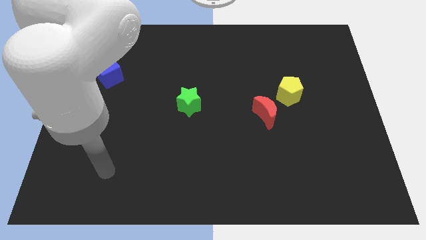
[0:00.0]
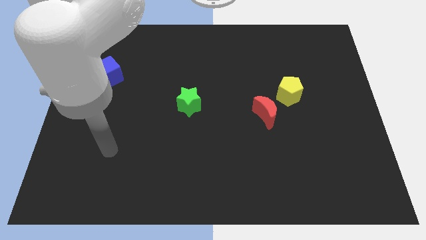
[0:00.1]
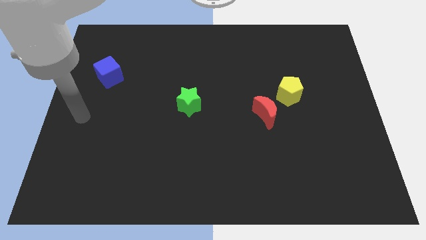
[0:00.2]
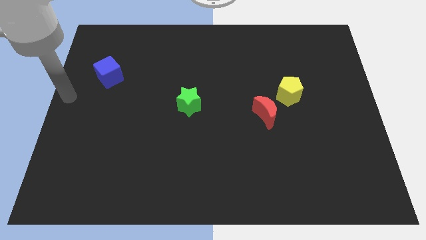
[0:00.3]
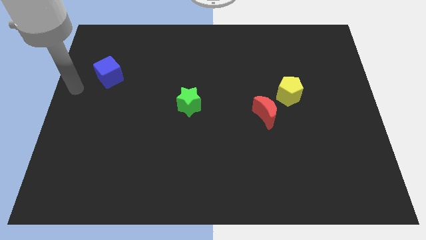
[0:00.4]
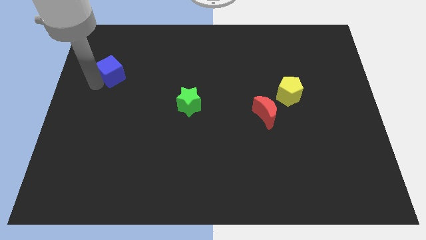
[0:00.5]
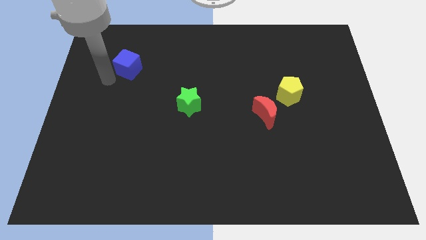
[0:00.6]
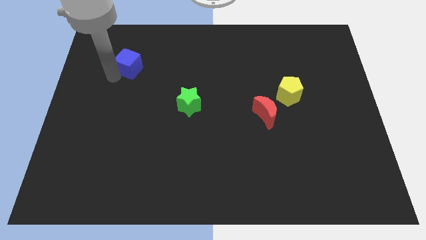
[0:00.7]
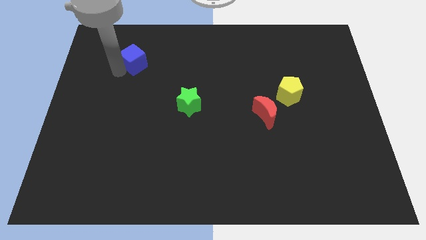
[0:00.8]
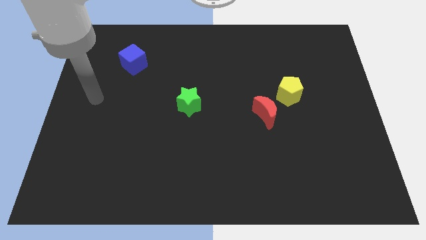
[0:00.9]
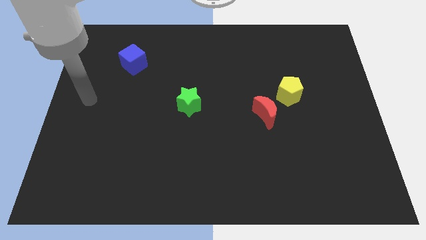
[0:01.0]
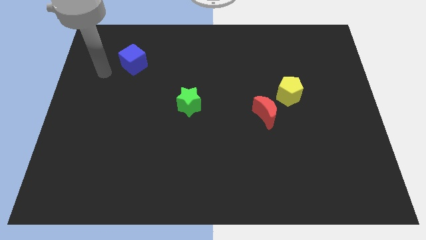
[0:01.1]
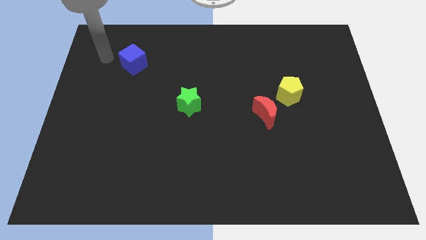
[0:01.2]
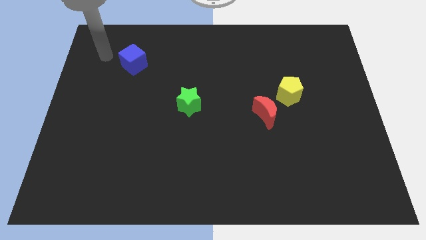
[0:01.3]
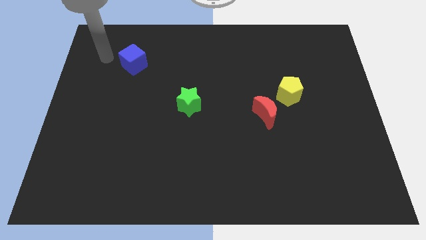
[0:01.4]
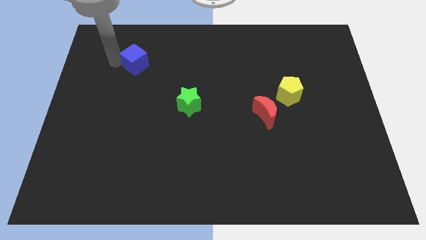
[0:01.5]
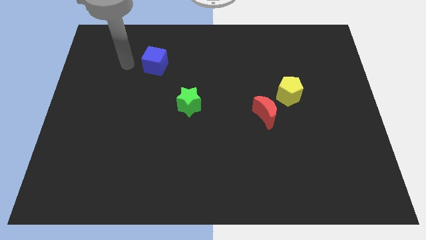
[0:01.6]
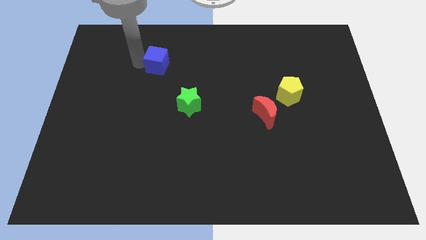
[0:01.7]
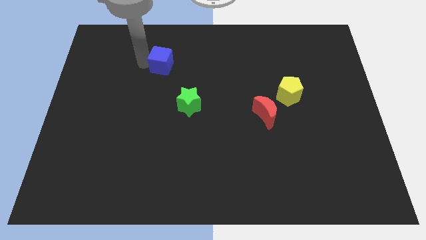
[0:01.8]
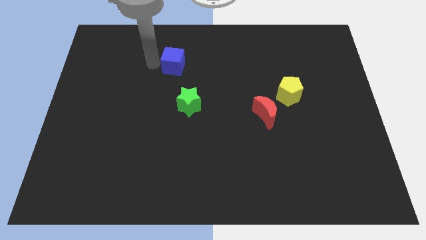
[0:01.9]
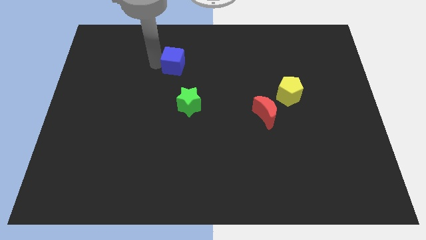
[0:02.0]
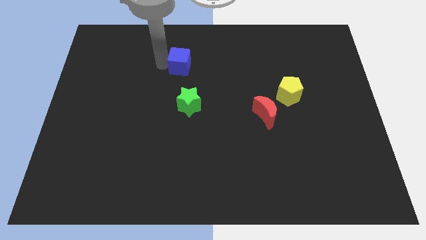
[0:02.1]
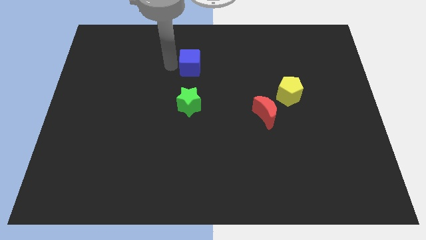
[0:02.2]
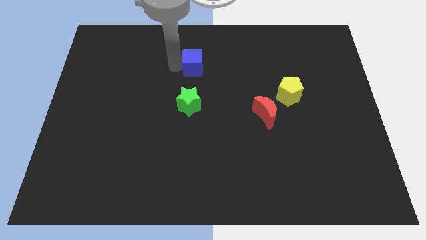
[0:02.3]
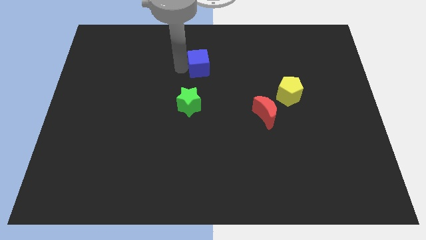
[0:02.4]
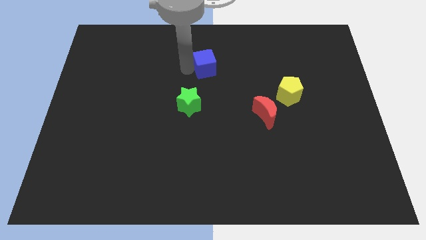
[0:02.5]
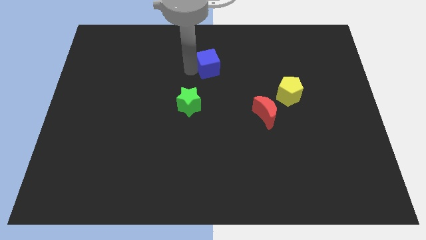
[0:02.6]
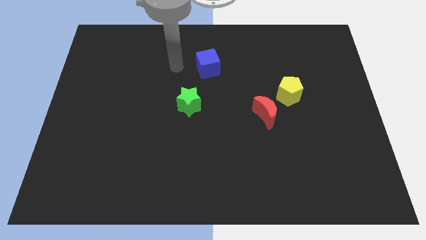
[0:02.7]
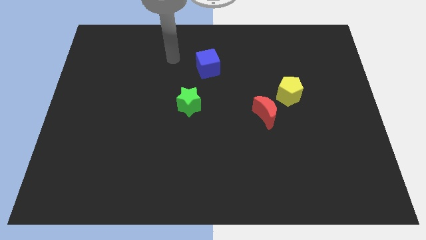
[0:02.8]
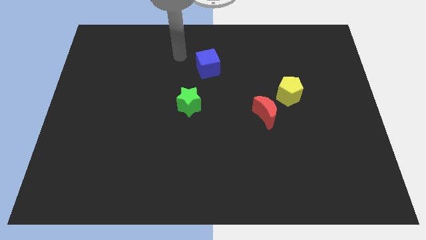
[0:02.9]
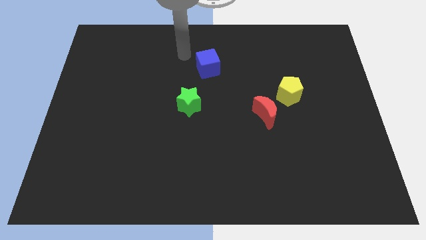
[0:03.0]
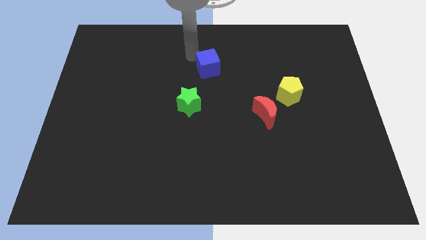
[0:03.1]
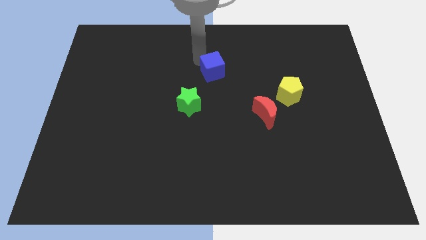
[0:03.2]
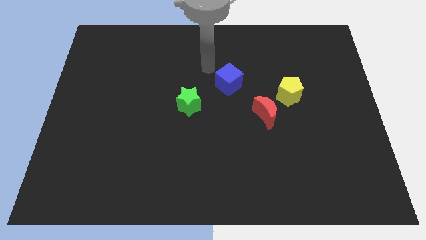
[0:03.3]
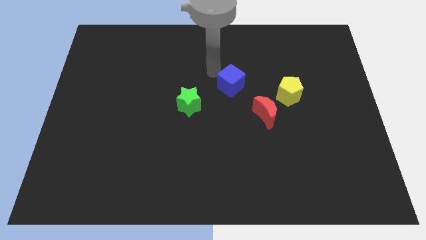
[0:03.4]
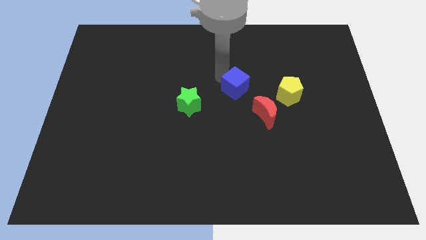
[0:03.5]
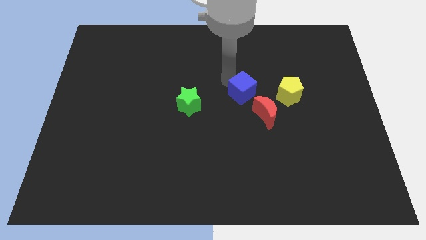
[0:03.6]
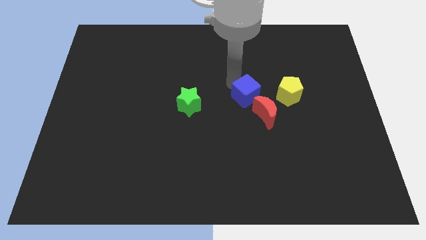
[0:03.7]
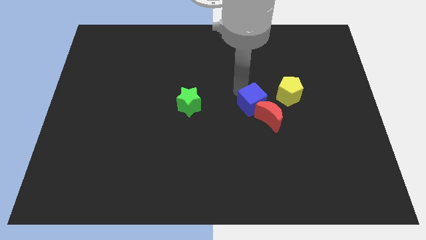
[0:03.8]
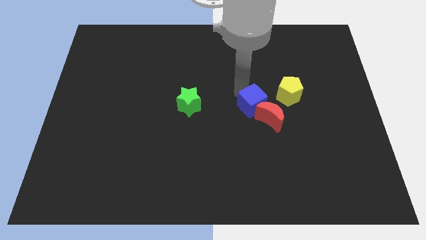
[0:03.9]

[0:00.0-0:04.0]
push the blue cube towards the red moon

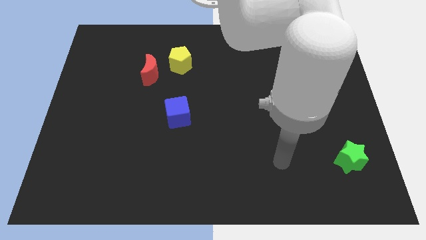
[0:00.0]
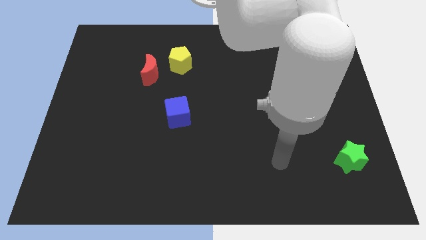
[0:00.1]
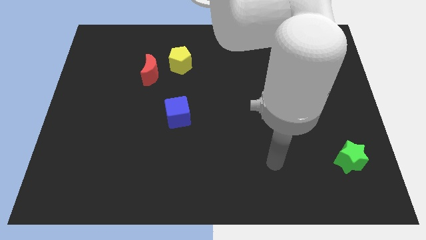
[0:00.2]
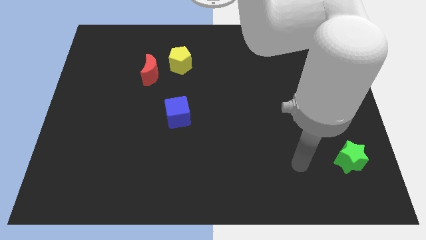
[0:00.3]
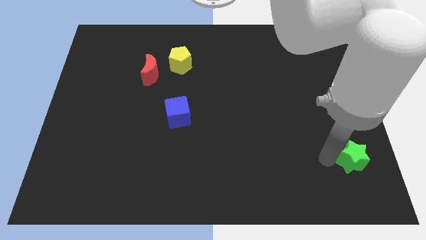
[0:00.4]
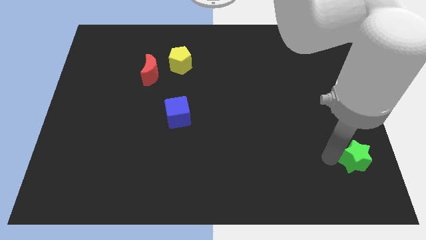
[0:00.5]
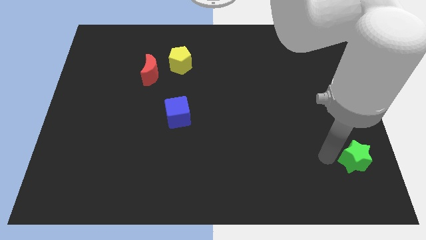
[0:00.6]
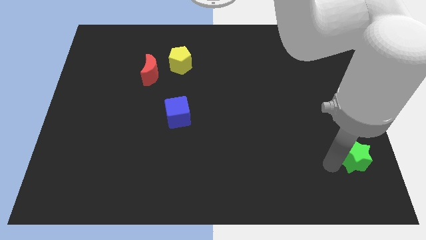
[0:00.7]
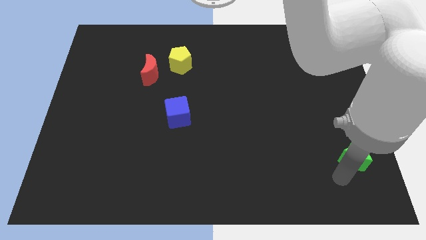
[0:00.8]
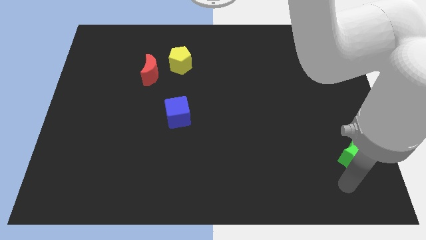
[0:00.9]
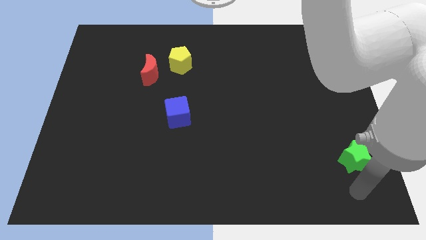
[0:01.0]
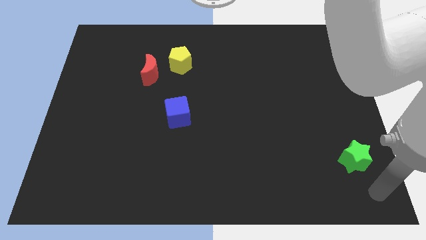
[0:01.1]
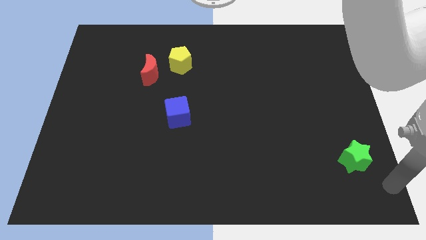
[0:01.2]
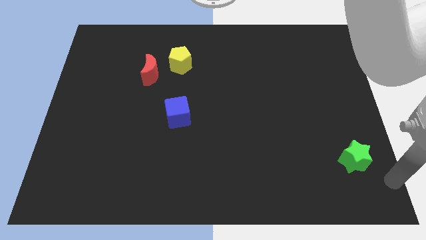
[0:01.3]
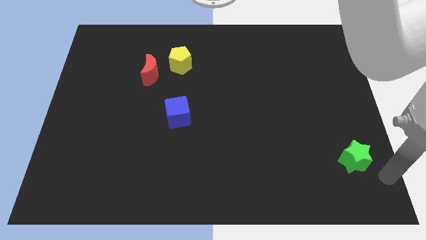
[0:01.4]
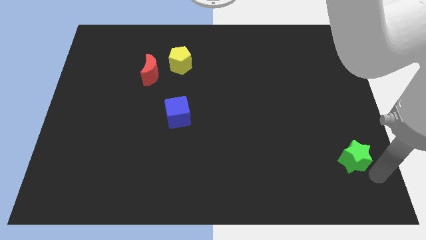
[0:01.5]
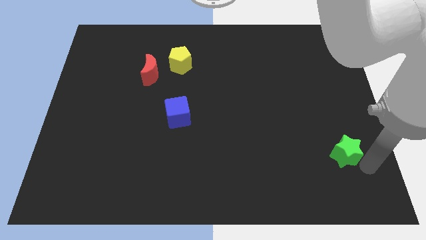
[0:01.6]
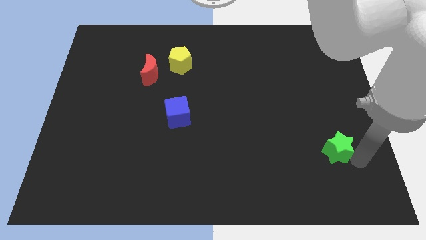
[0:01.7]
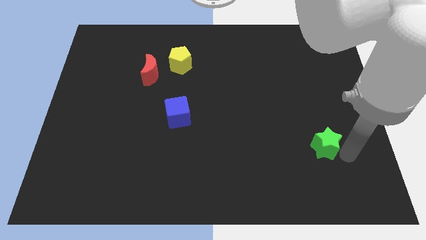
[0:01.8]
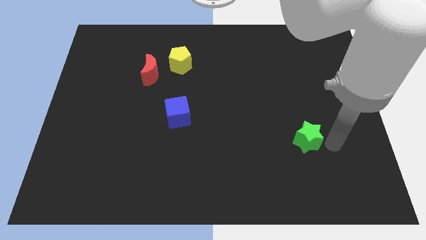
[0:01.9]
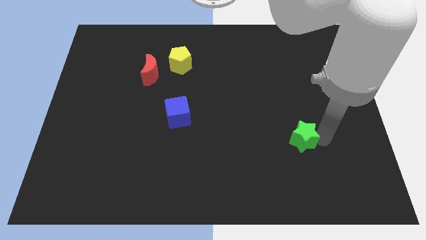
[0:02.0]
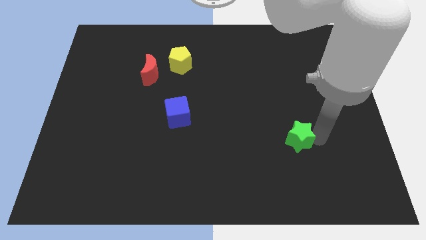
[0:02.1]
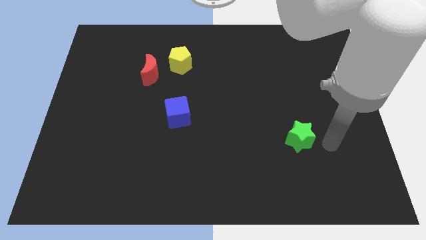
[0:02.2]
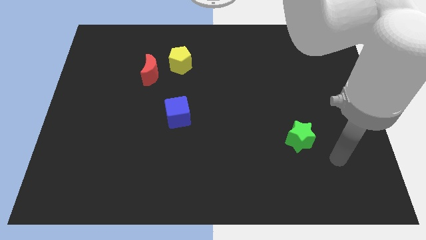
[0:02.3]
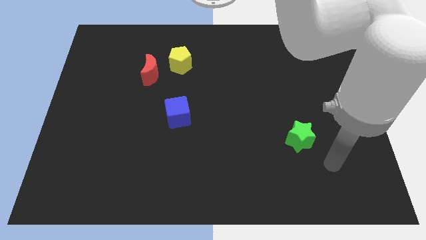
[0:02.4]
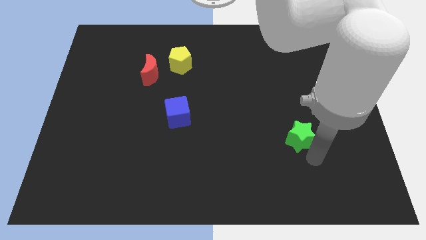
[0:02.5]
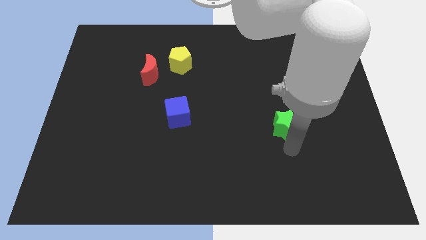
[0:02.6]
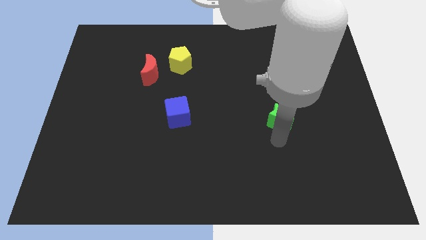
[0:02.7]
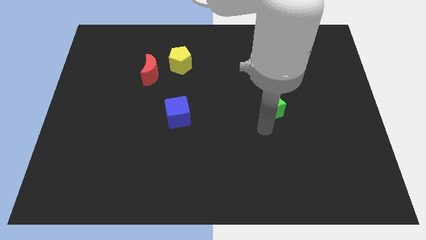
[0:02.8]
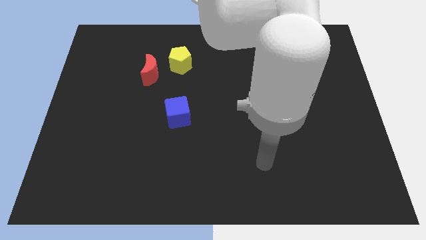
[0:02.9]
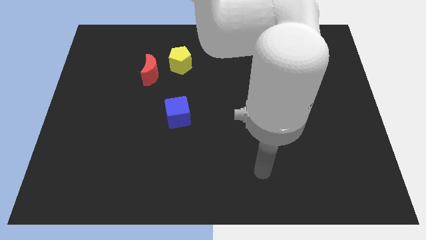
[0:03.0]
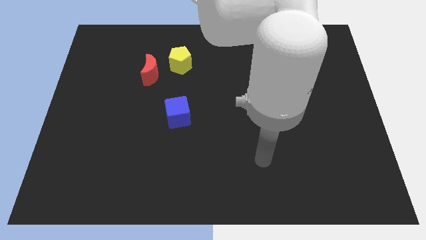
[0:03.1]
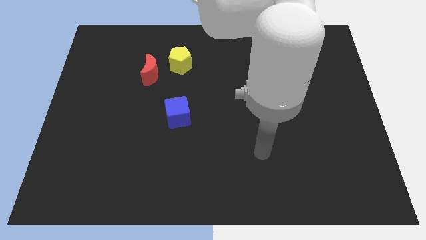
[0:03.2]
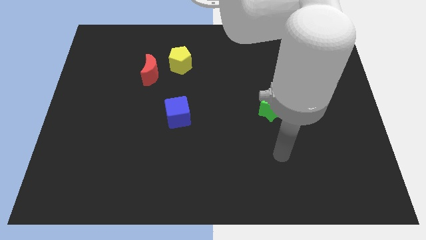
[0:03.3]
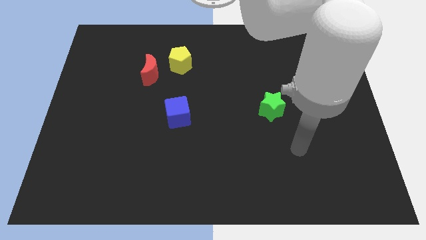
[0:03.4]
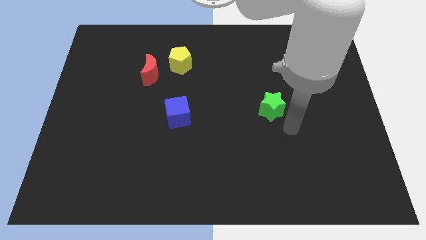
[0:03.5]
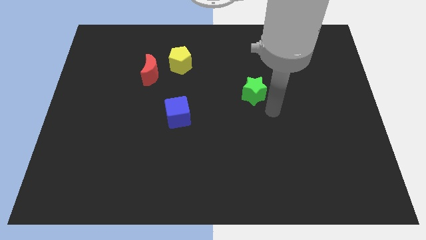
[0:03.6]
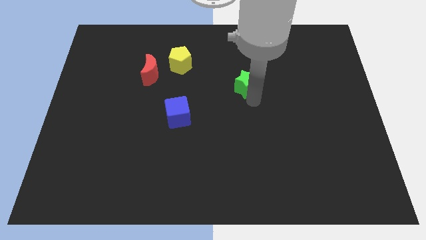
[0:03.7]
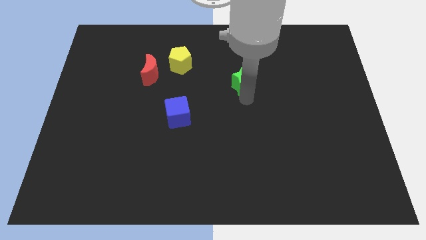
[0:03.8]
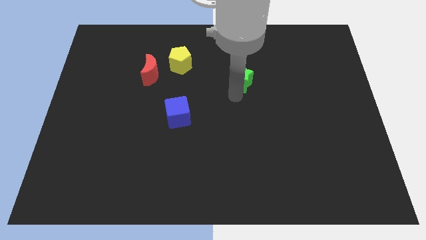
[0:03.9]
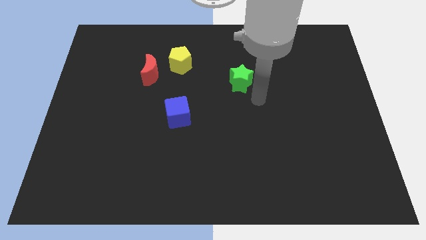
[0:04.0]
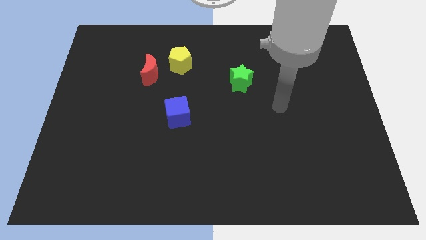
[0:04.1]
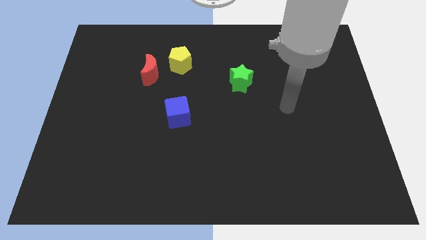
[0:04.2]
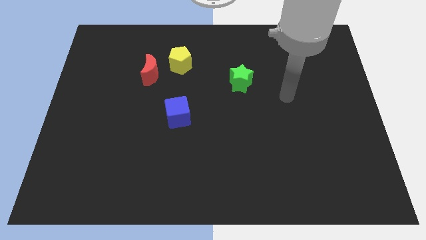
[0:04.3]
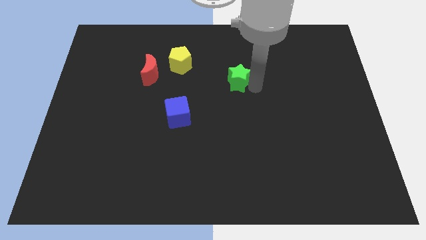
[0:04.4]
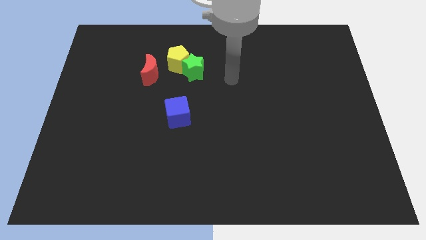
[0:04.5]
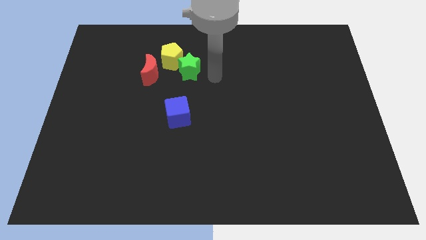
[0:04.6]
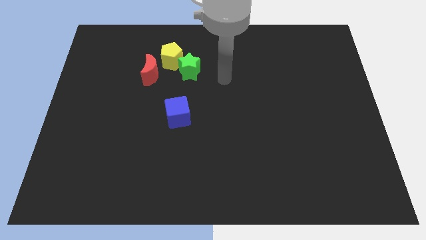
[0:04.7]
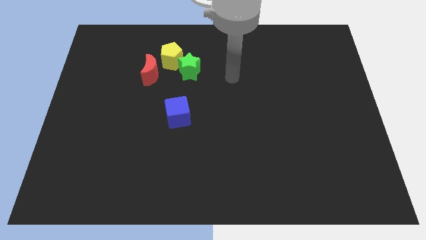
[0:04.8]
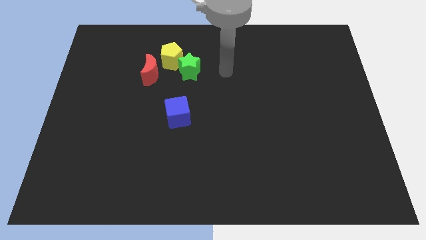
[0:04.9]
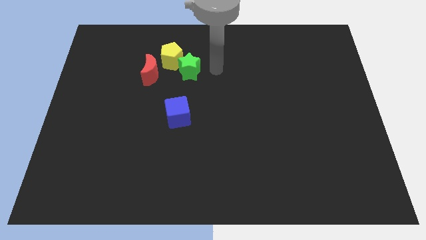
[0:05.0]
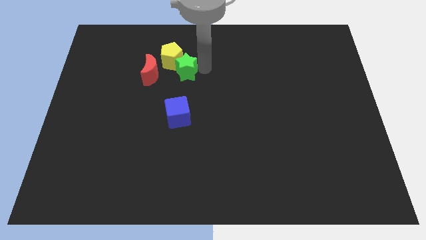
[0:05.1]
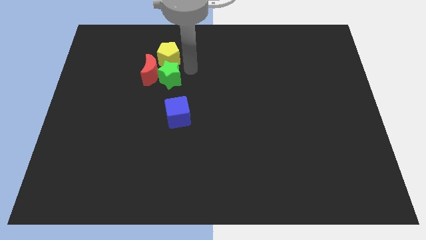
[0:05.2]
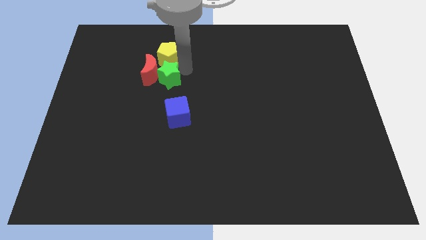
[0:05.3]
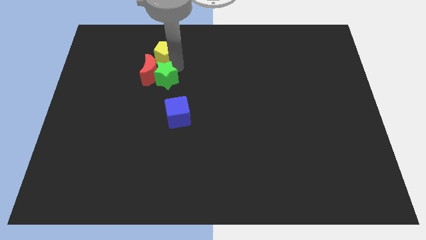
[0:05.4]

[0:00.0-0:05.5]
slide the green star to the moon
